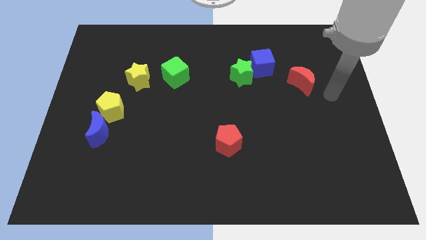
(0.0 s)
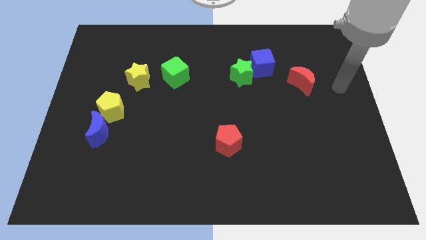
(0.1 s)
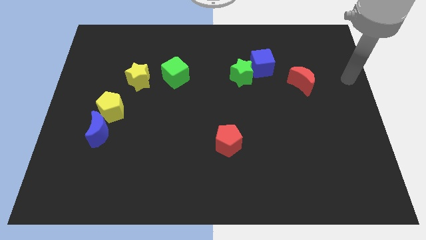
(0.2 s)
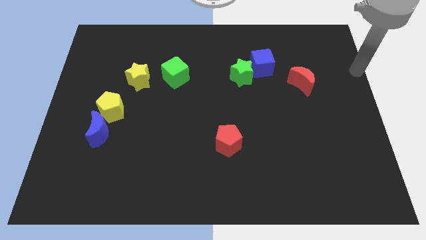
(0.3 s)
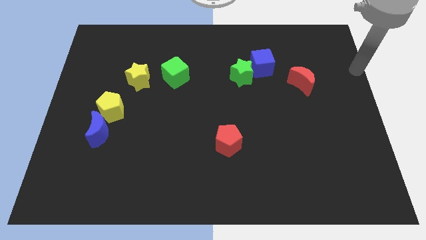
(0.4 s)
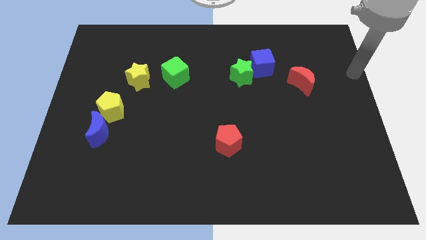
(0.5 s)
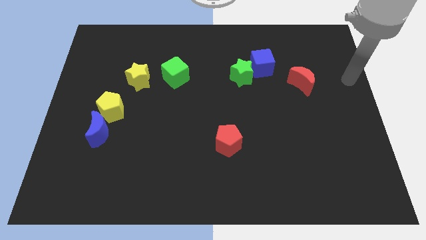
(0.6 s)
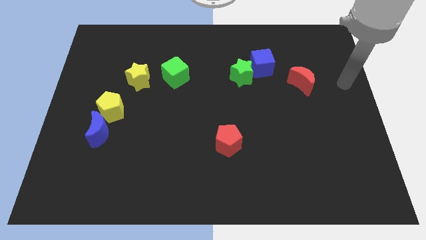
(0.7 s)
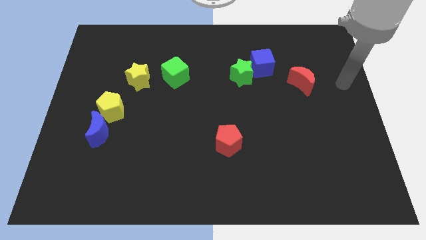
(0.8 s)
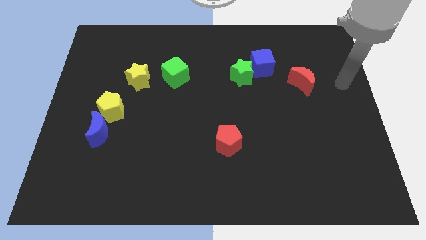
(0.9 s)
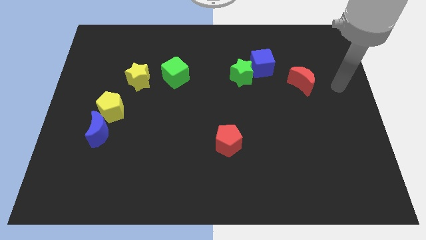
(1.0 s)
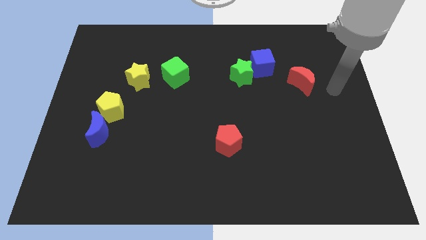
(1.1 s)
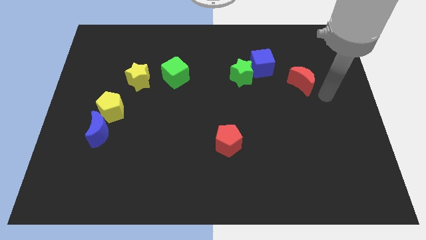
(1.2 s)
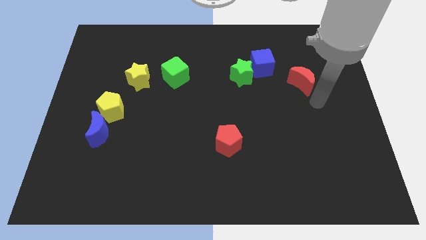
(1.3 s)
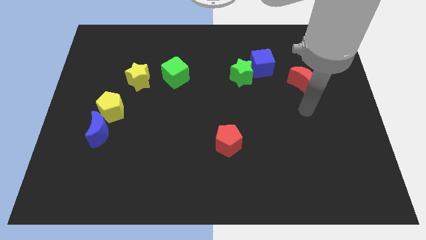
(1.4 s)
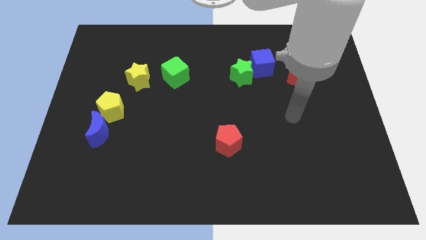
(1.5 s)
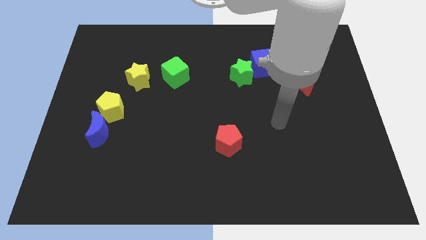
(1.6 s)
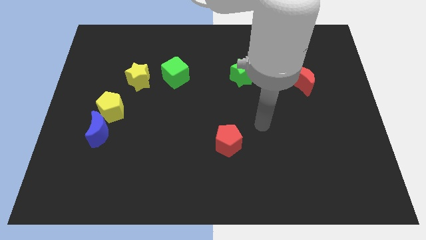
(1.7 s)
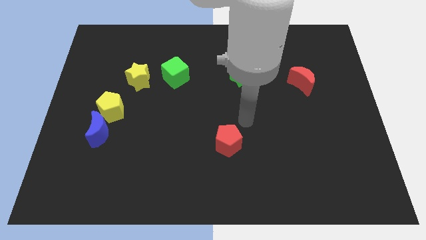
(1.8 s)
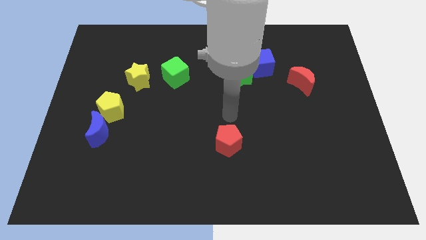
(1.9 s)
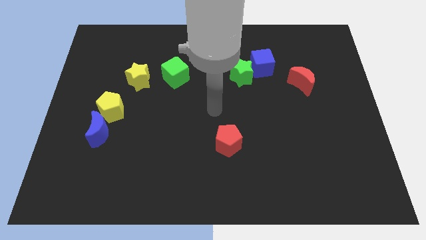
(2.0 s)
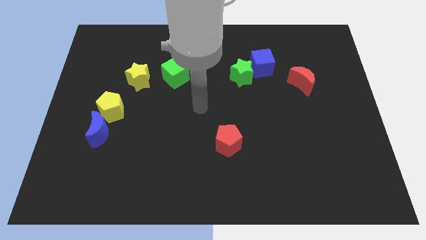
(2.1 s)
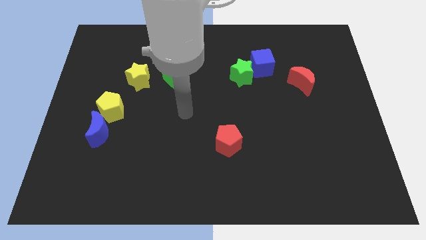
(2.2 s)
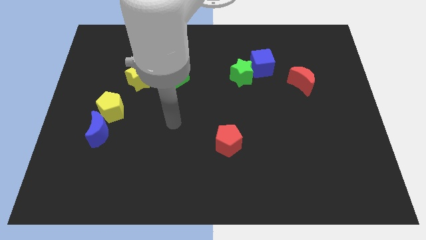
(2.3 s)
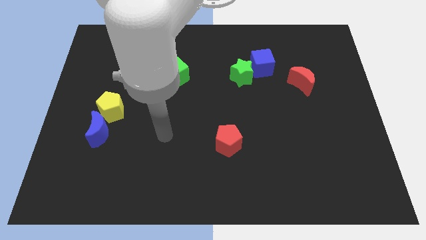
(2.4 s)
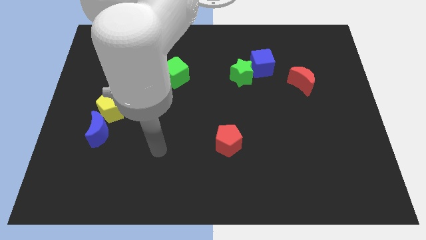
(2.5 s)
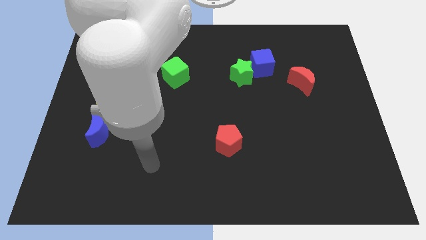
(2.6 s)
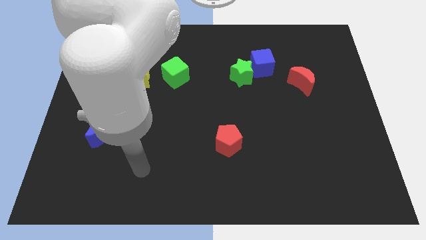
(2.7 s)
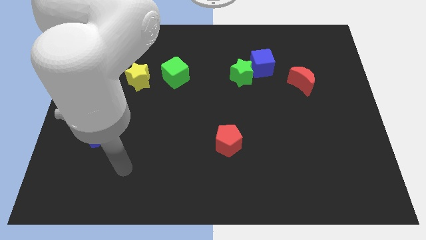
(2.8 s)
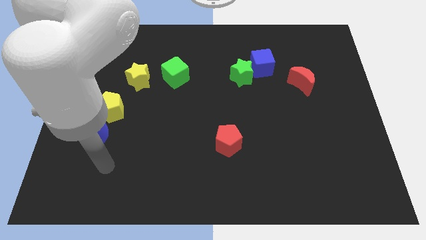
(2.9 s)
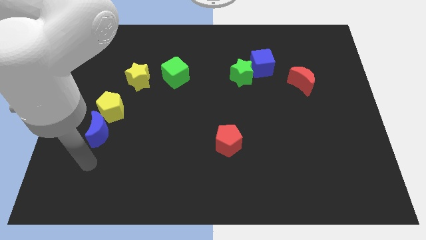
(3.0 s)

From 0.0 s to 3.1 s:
put your hand below the blue moon

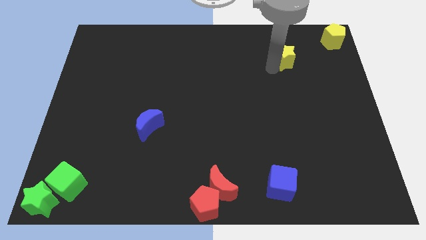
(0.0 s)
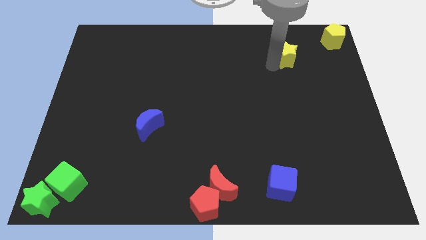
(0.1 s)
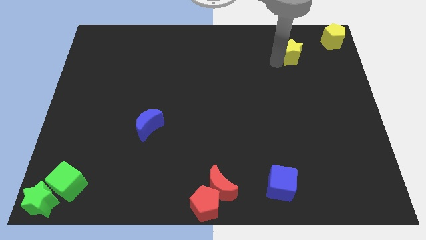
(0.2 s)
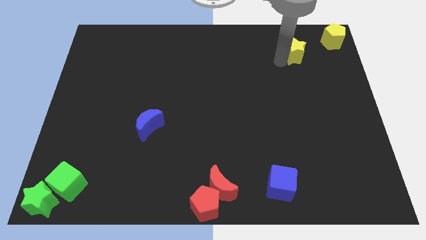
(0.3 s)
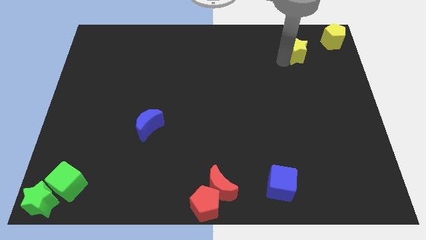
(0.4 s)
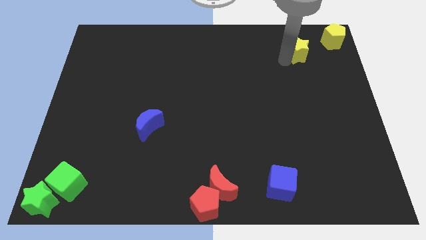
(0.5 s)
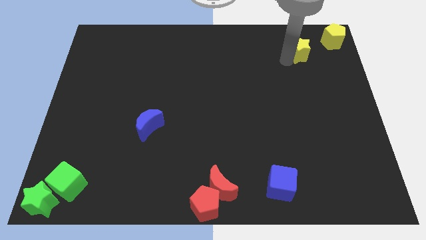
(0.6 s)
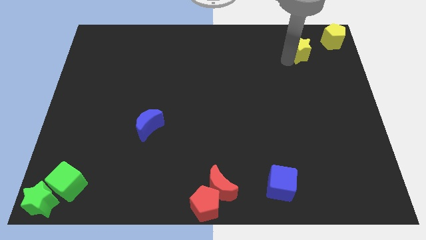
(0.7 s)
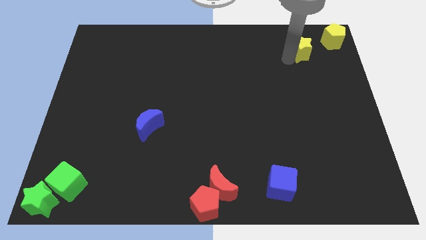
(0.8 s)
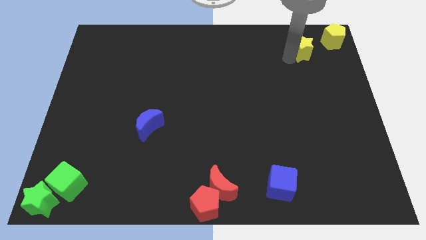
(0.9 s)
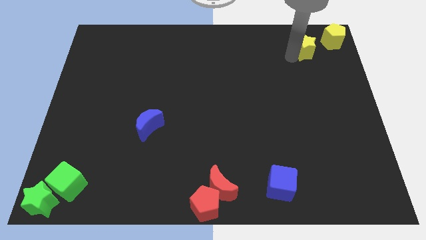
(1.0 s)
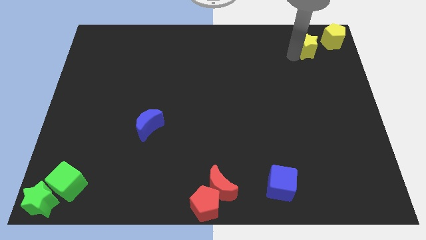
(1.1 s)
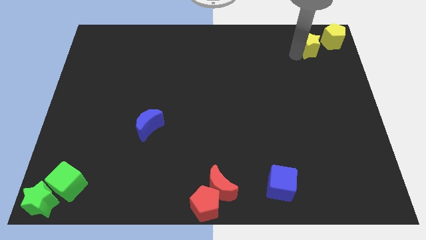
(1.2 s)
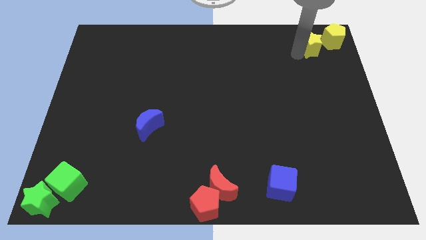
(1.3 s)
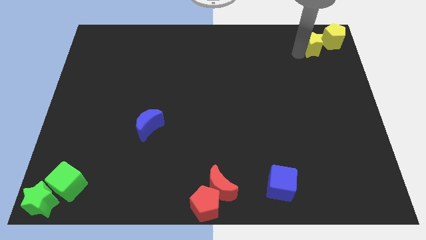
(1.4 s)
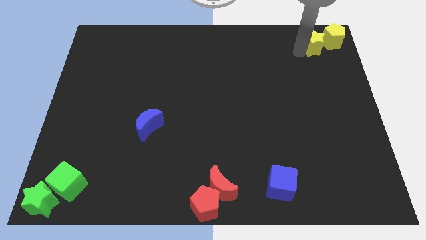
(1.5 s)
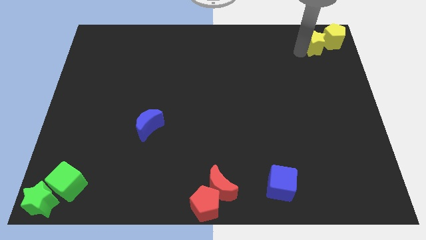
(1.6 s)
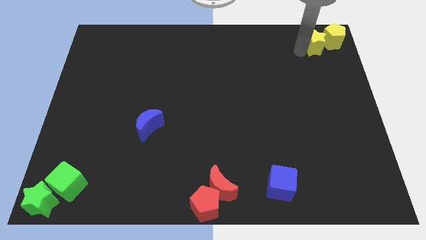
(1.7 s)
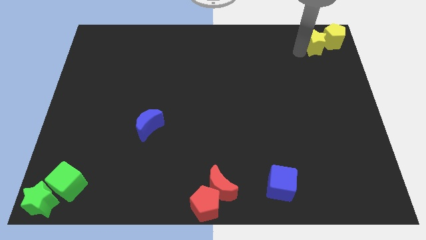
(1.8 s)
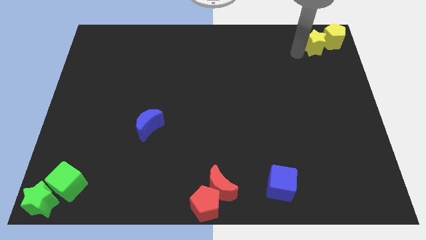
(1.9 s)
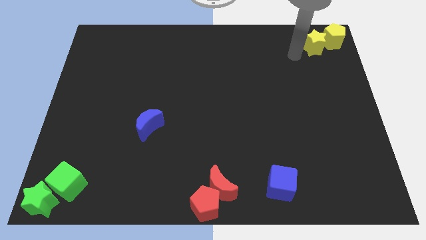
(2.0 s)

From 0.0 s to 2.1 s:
place the yellow star to the left of the yellow pentagon at the top right corner

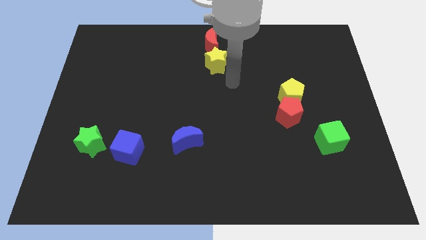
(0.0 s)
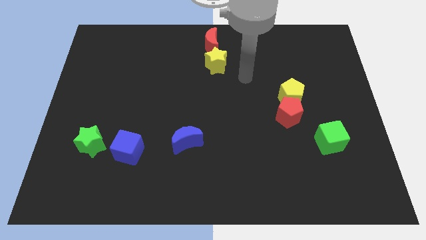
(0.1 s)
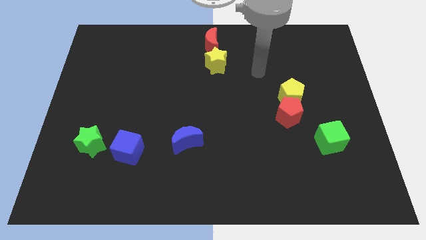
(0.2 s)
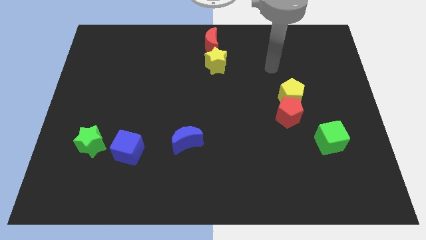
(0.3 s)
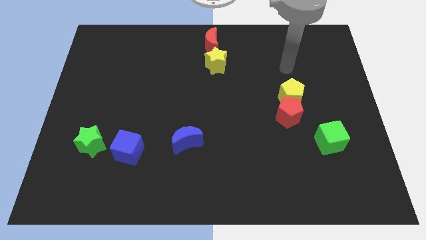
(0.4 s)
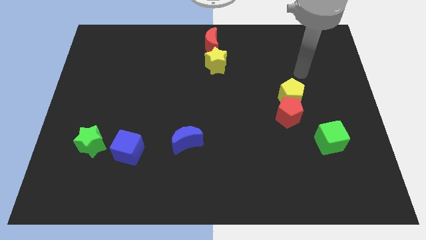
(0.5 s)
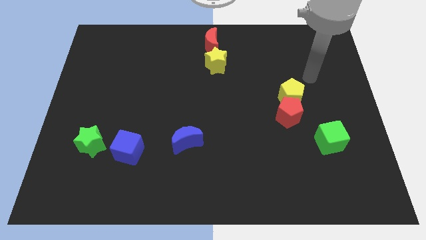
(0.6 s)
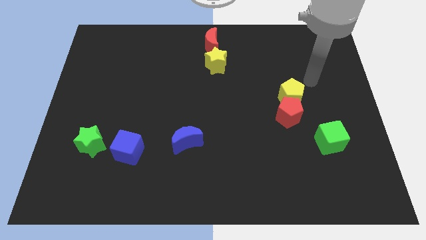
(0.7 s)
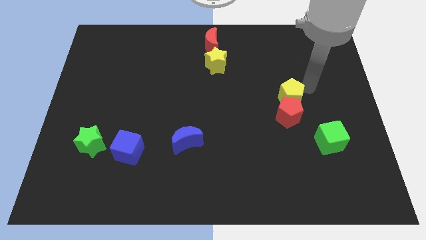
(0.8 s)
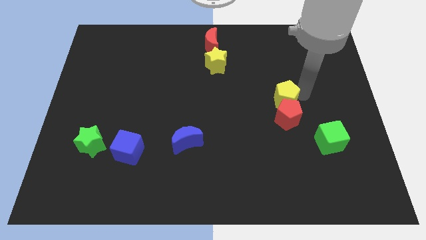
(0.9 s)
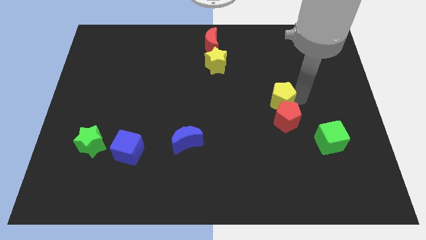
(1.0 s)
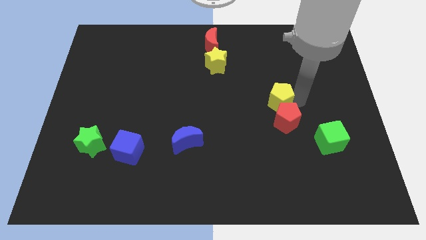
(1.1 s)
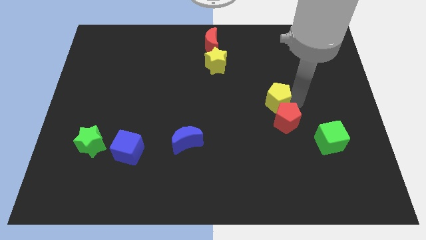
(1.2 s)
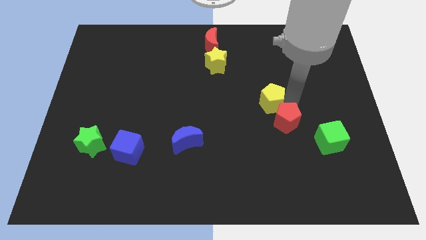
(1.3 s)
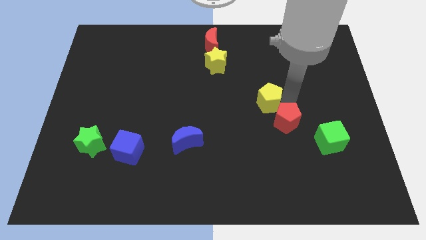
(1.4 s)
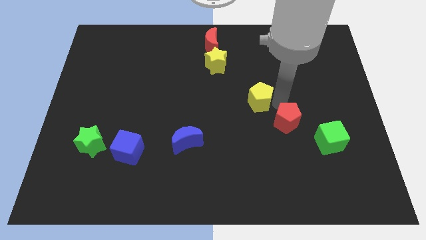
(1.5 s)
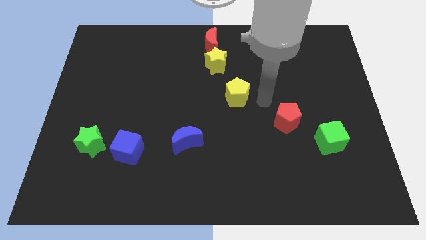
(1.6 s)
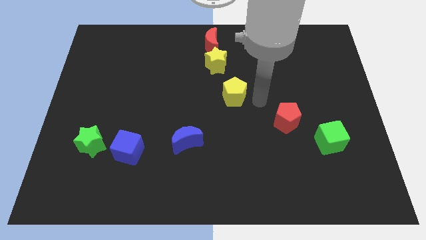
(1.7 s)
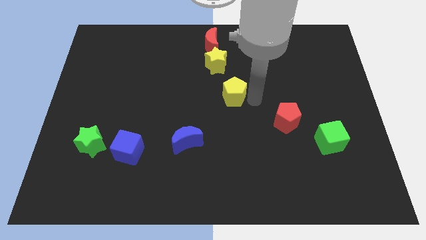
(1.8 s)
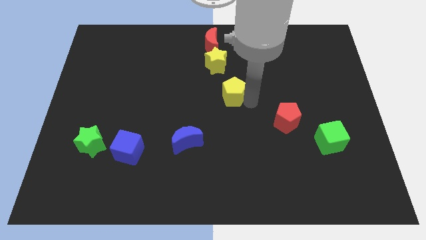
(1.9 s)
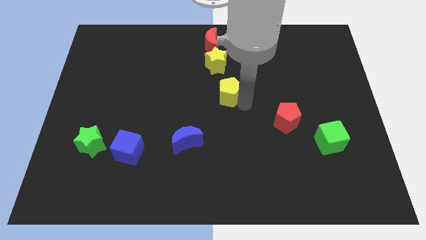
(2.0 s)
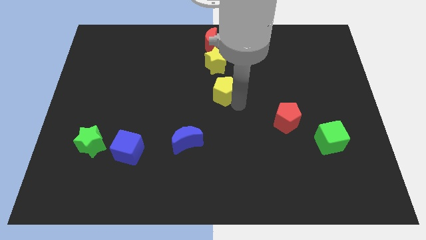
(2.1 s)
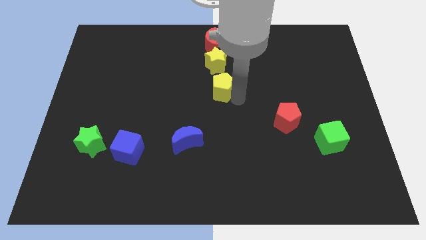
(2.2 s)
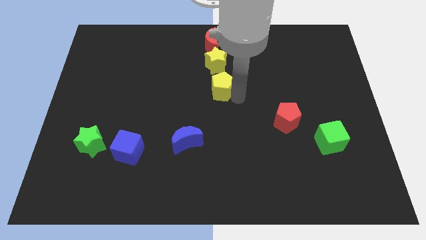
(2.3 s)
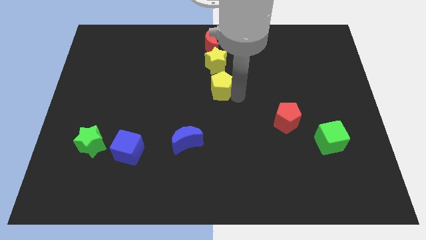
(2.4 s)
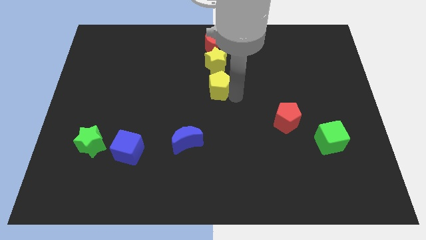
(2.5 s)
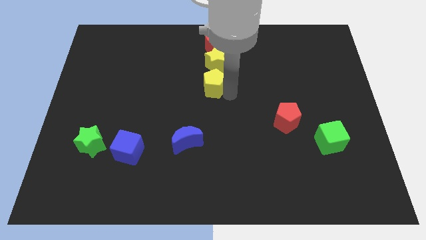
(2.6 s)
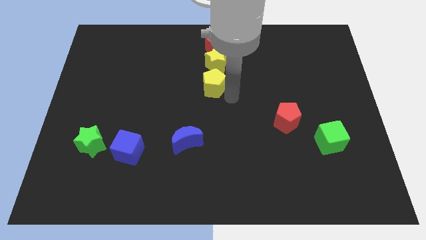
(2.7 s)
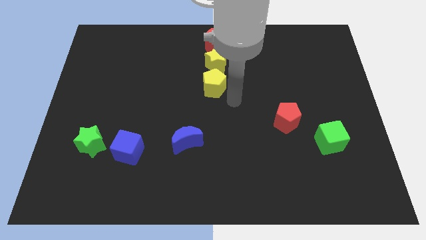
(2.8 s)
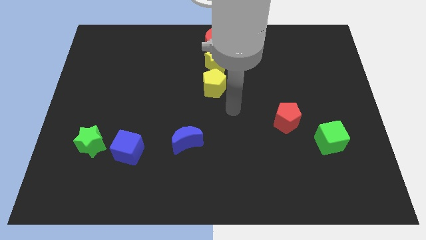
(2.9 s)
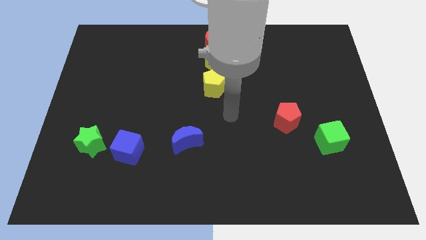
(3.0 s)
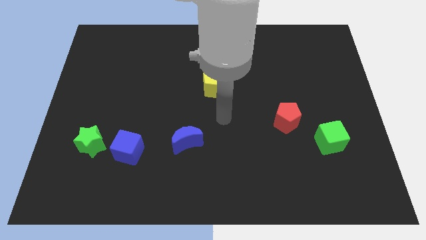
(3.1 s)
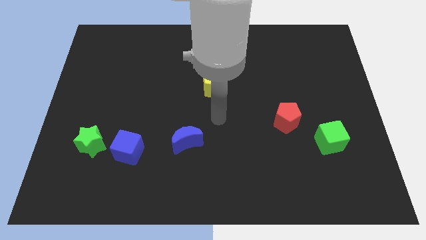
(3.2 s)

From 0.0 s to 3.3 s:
push the yellow pentagon away from the top of the red pentagon

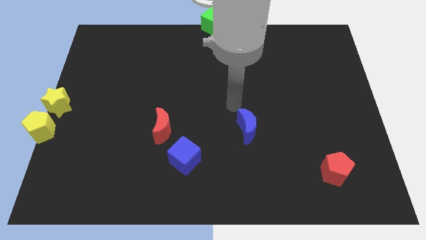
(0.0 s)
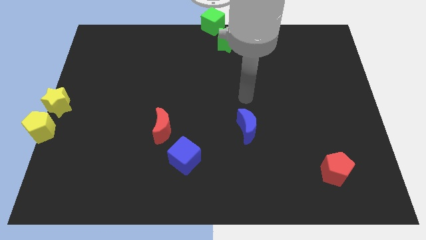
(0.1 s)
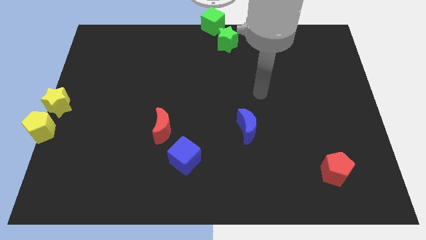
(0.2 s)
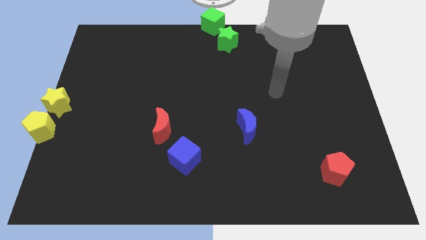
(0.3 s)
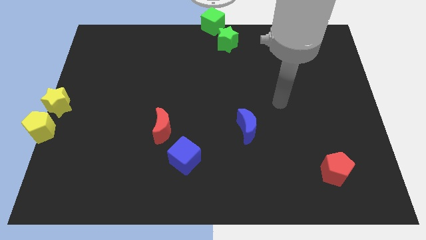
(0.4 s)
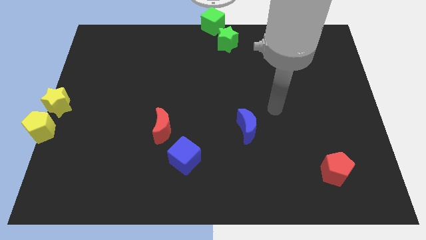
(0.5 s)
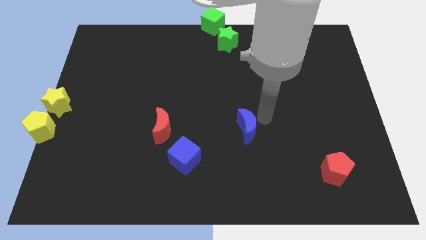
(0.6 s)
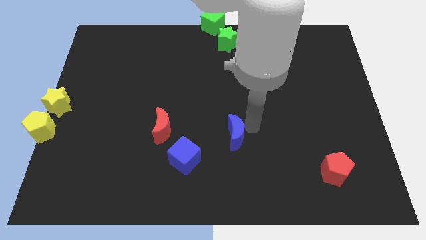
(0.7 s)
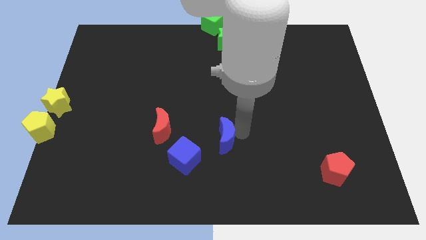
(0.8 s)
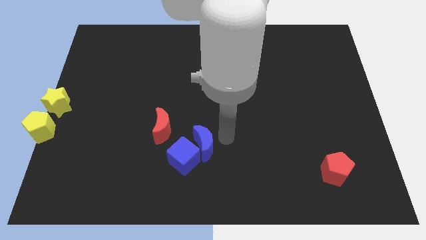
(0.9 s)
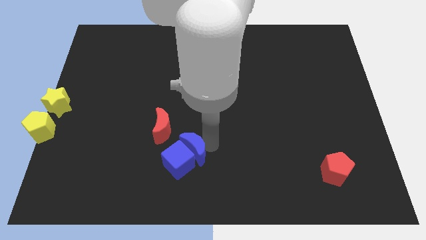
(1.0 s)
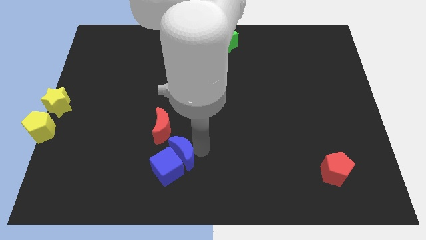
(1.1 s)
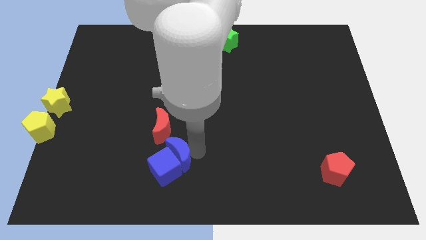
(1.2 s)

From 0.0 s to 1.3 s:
push blue moon into blue cube
